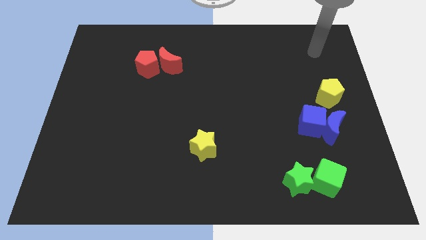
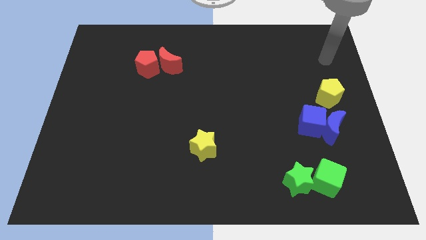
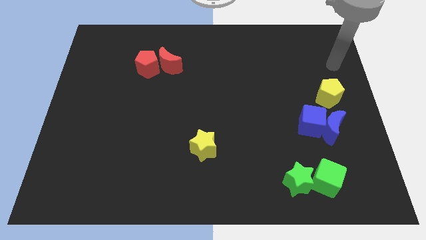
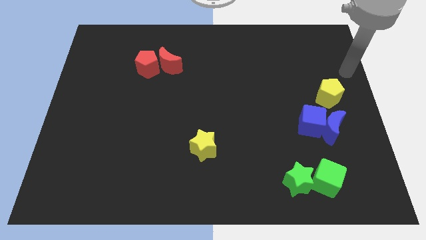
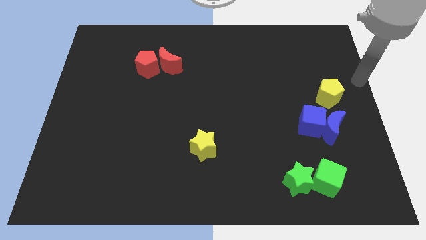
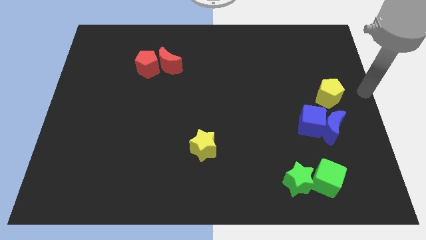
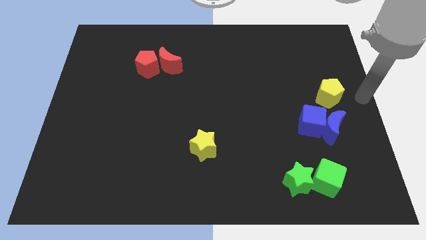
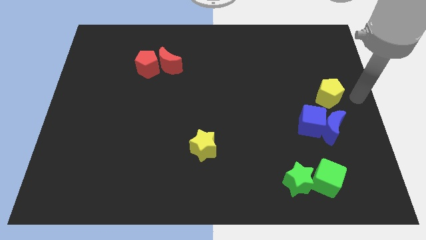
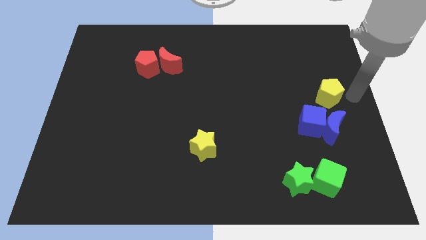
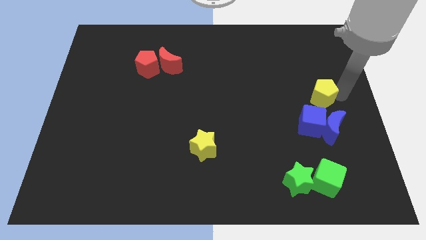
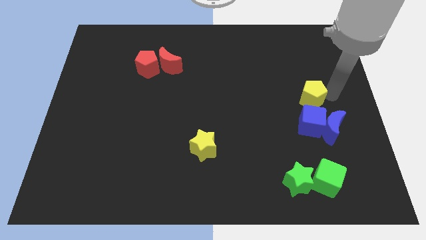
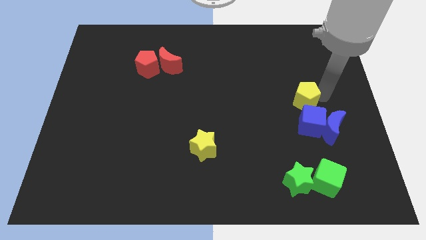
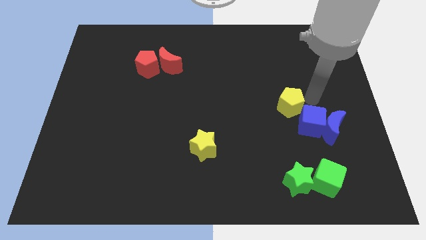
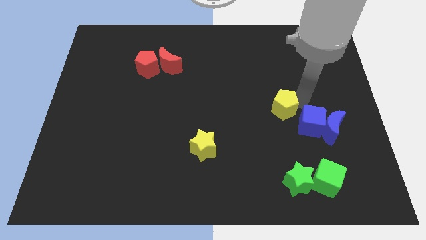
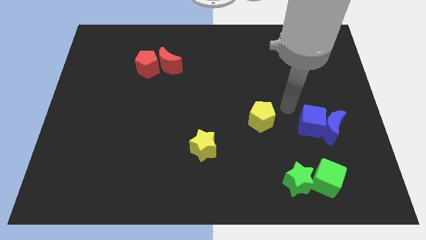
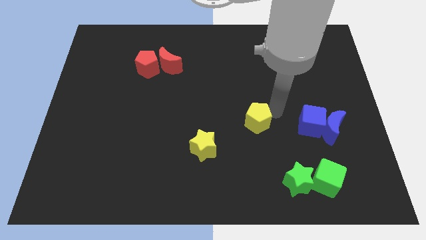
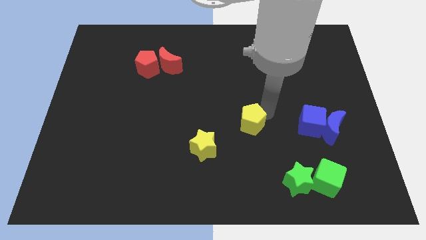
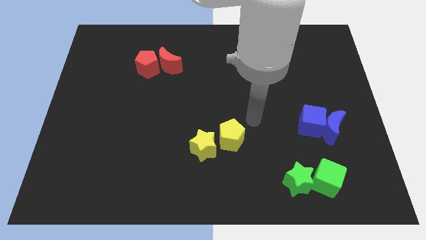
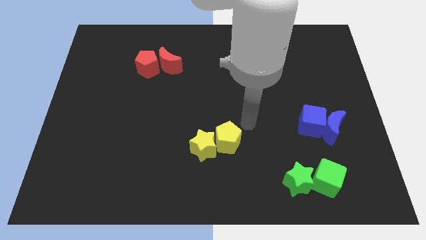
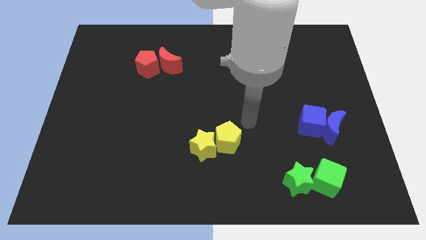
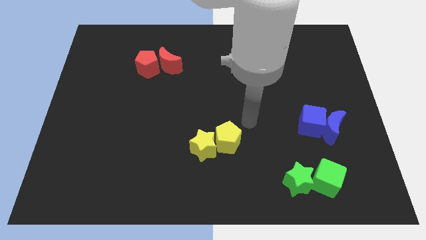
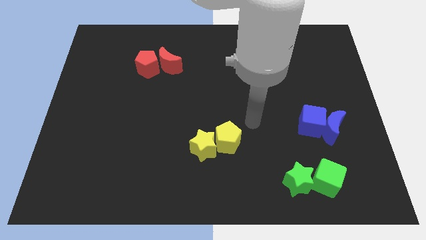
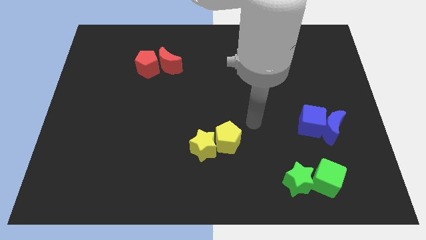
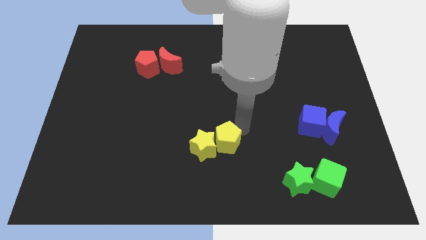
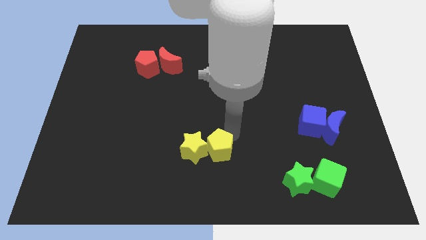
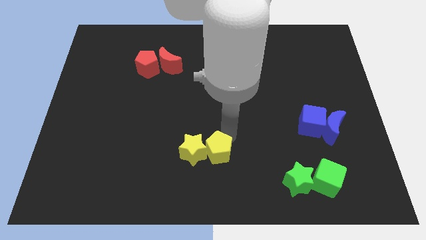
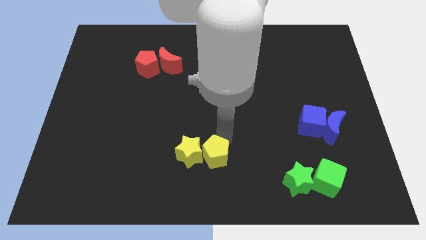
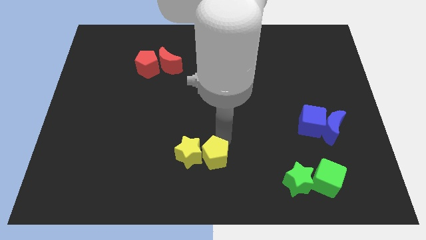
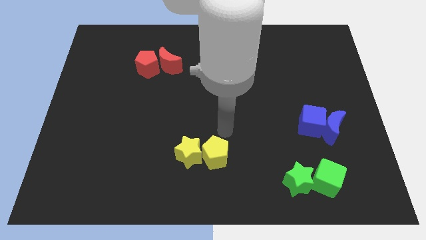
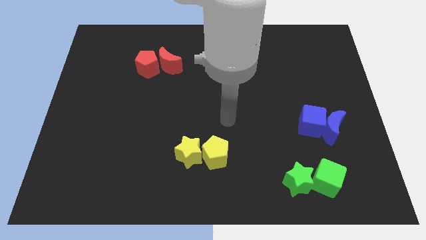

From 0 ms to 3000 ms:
move the yellow pentagon close to yellow star

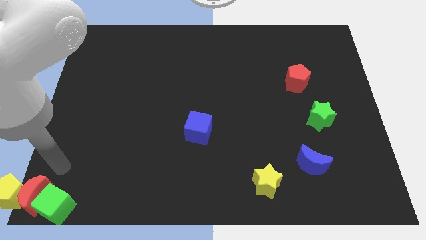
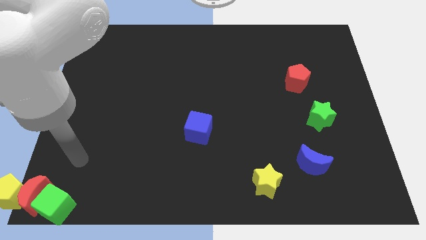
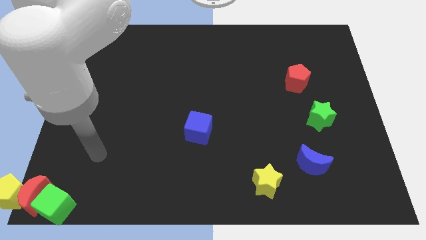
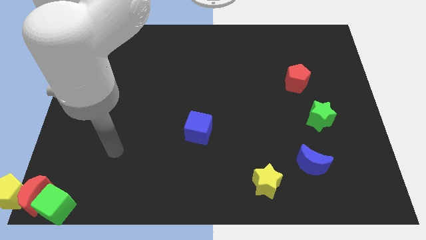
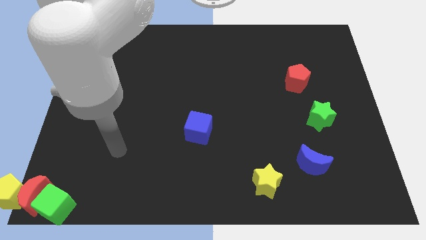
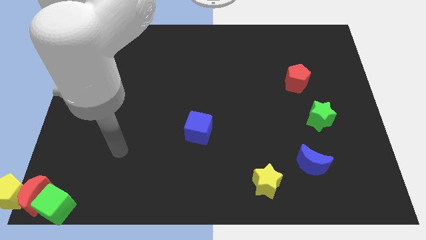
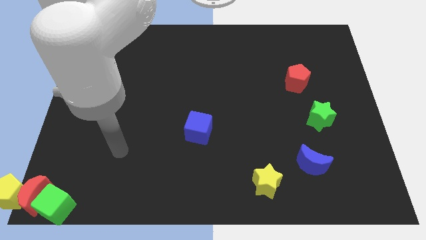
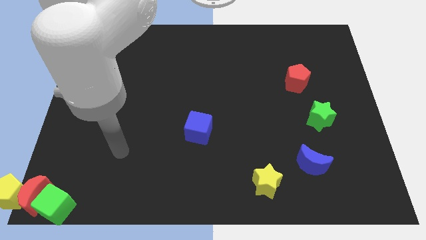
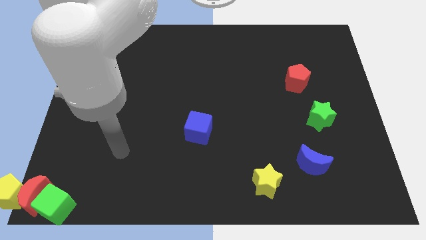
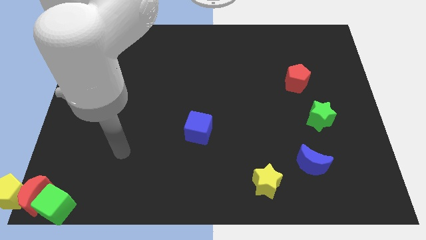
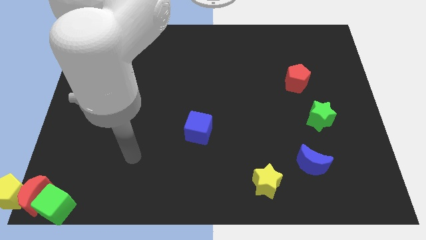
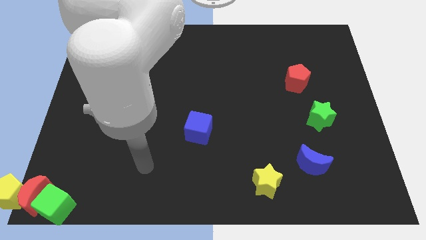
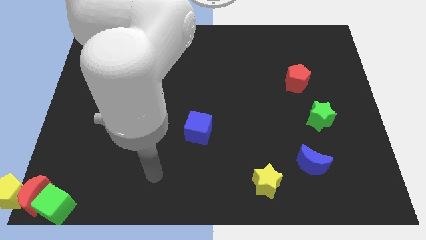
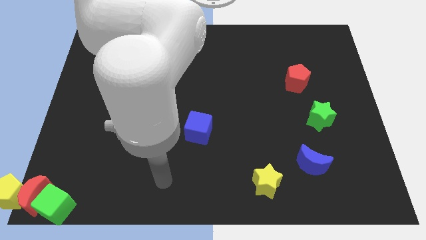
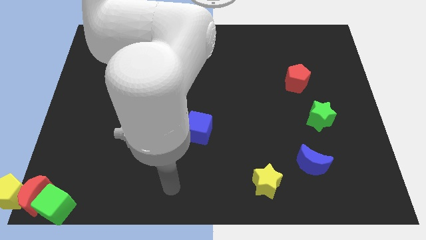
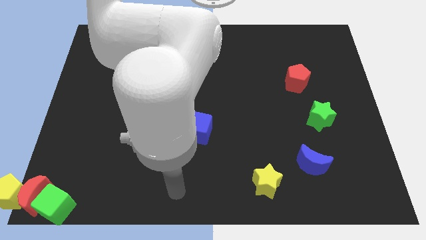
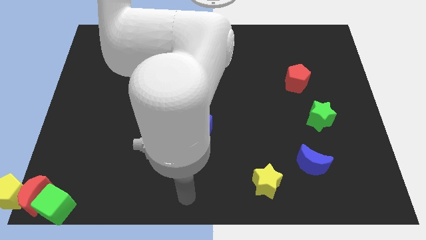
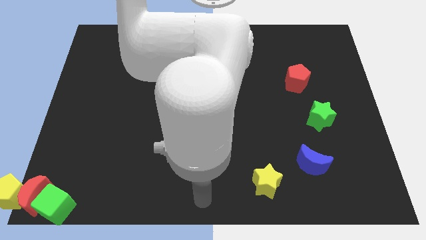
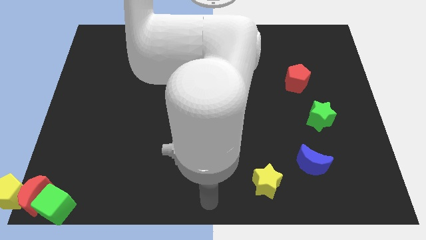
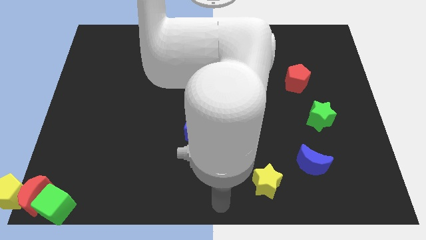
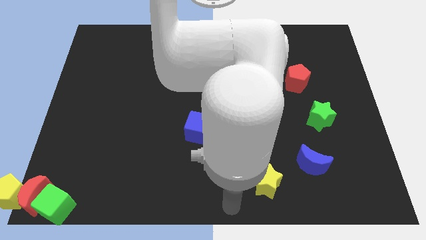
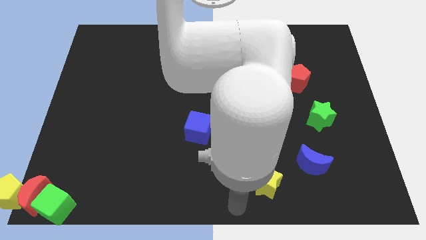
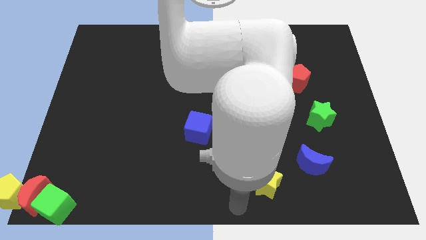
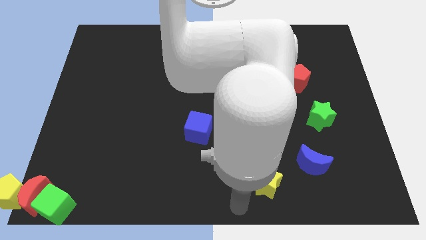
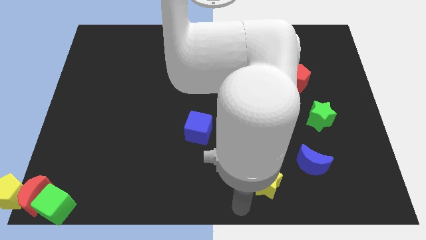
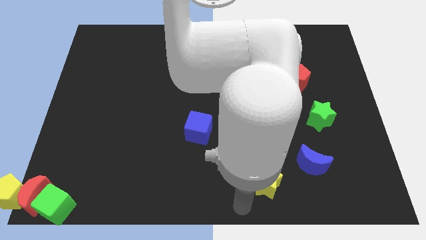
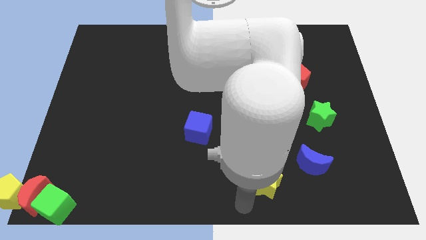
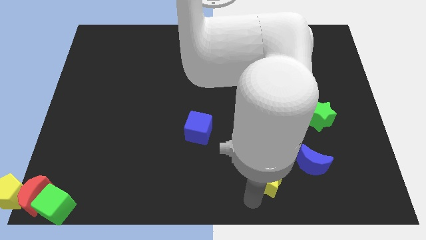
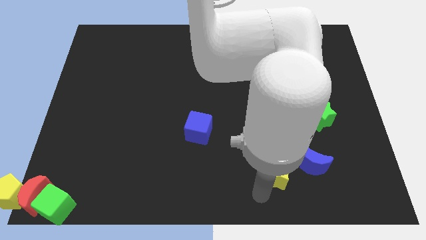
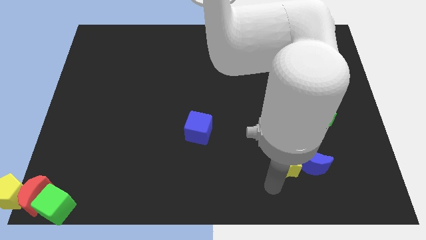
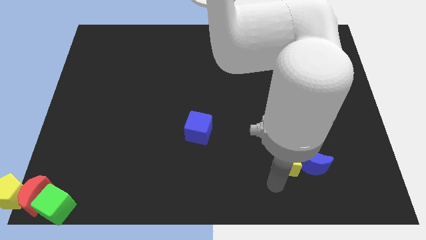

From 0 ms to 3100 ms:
push the yellow star to the left of the blue crescent

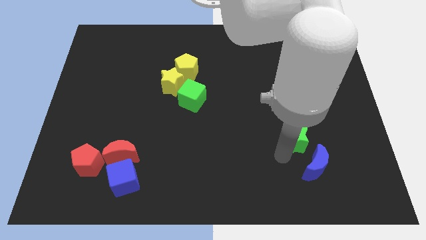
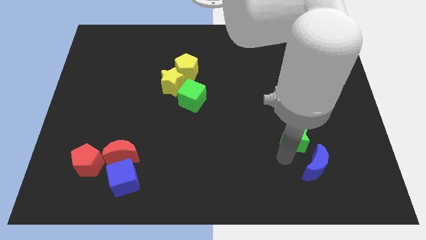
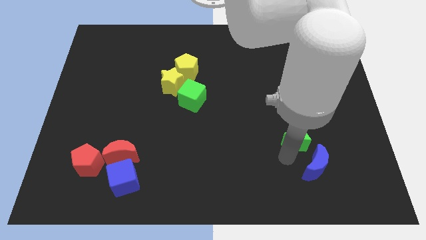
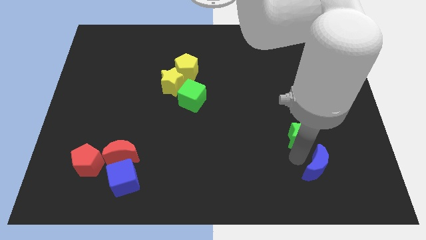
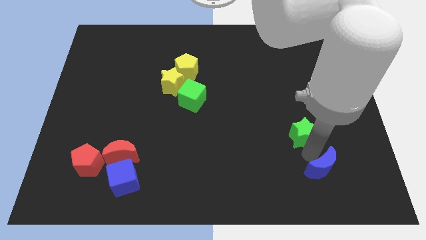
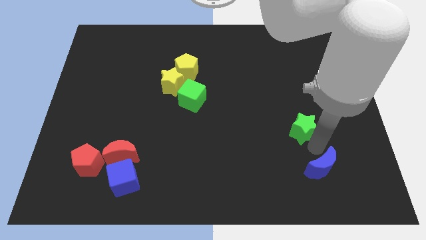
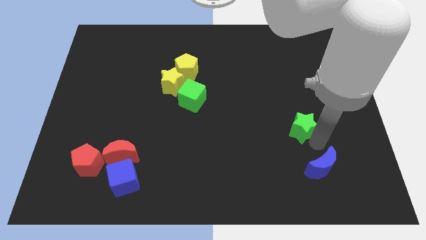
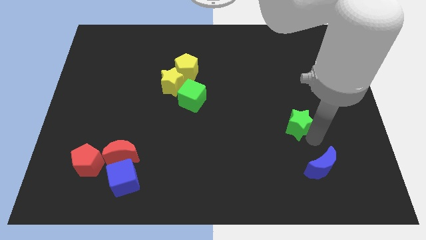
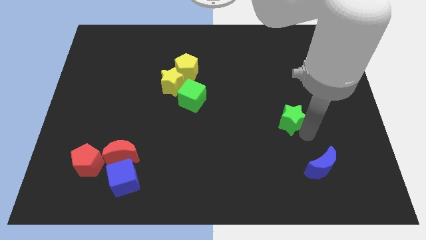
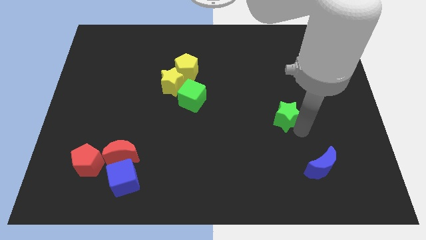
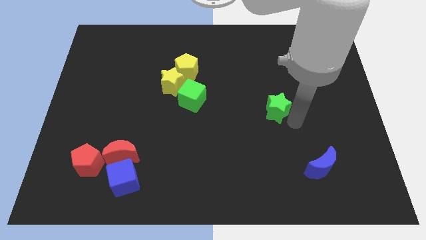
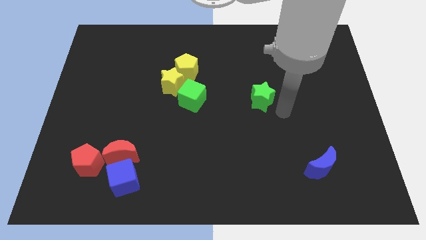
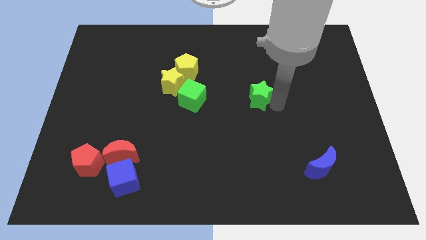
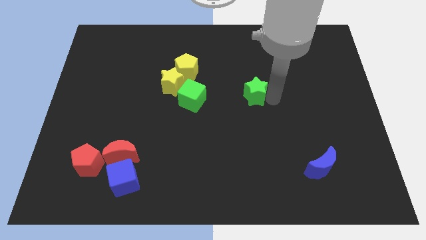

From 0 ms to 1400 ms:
place green star to the right of green cube

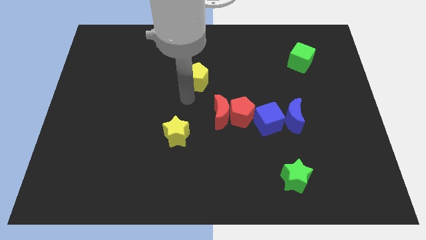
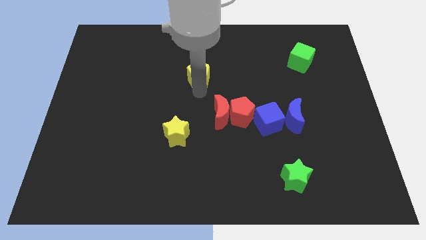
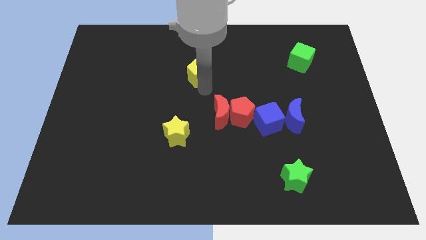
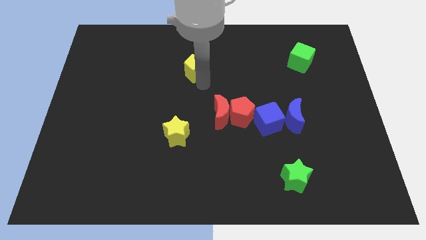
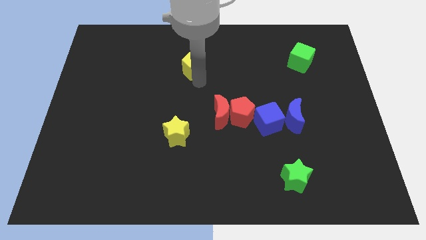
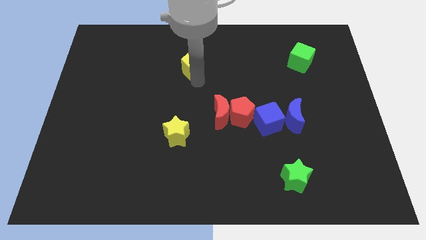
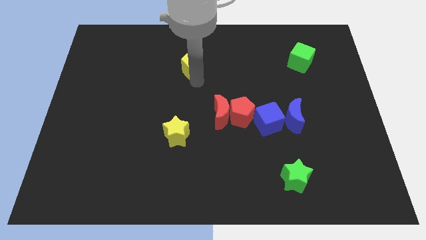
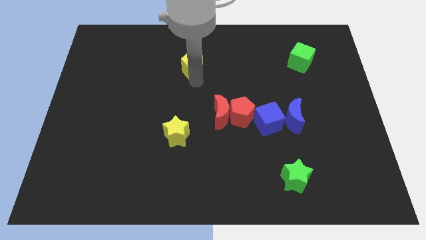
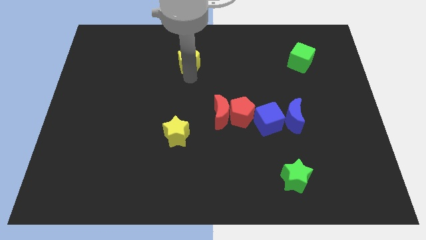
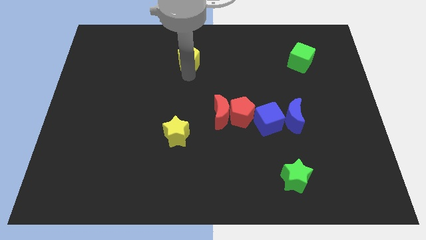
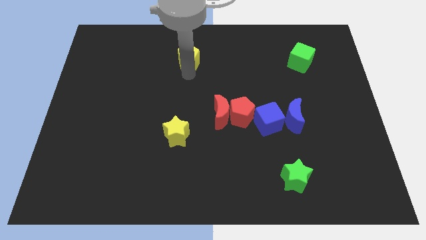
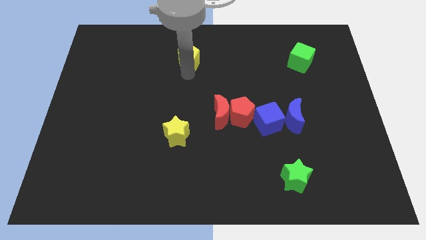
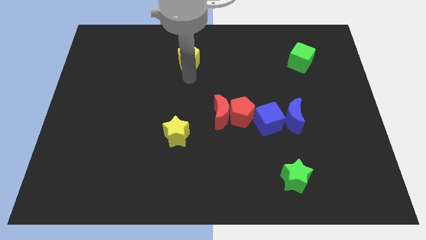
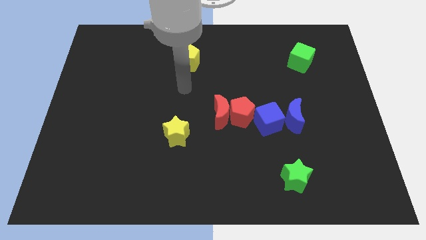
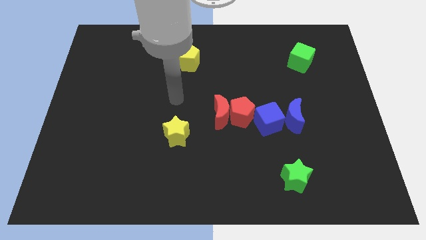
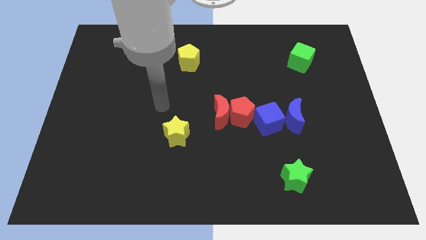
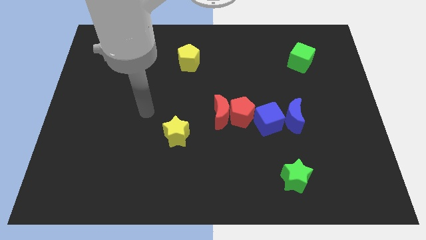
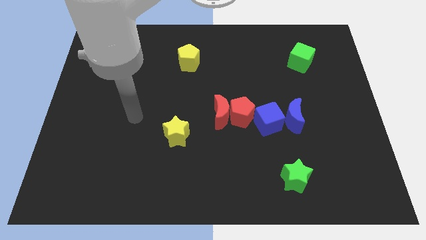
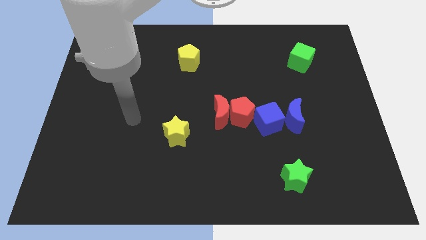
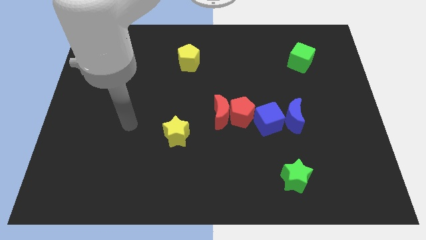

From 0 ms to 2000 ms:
move the yellow pentagon slightly away from the red moon
